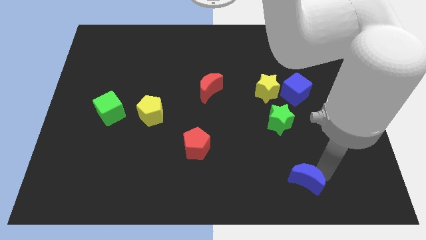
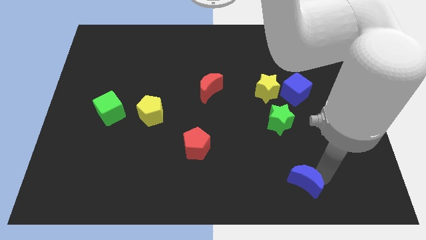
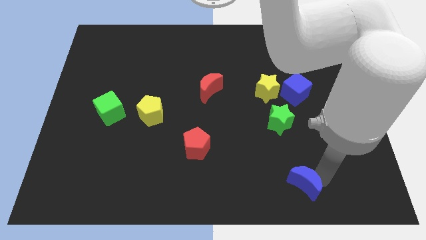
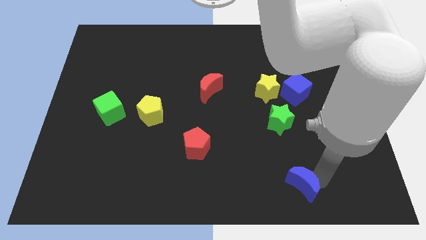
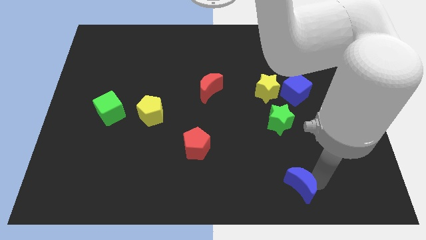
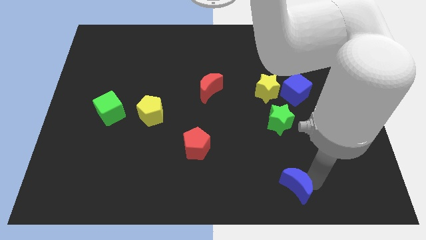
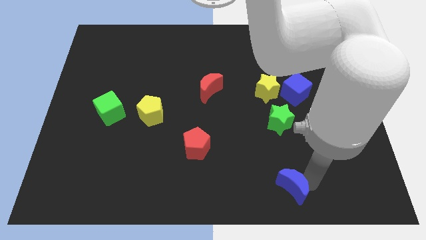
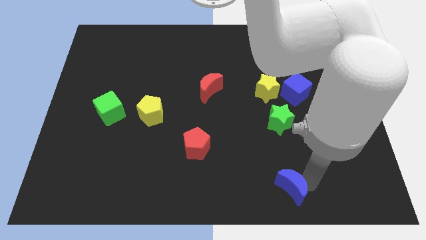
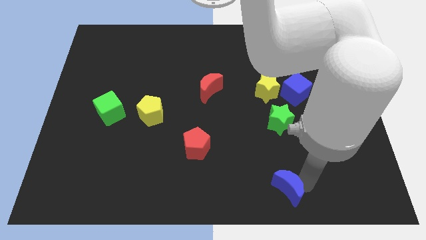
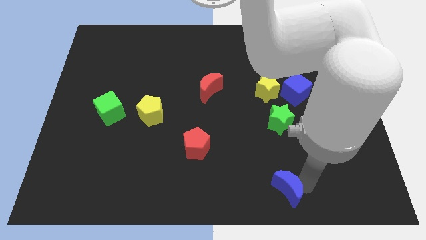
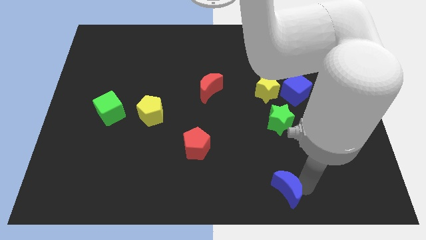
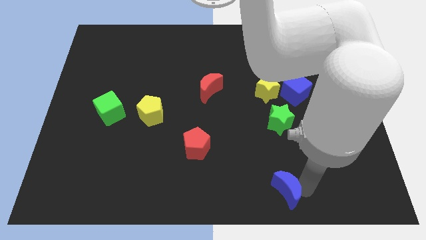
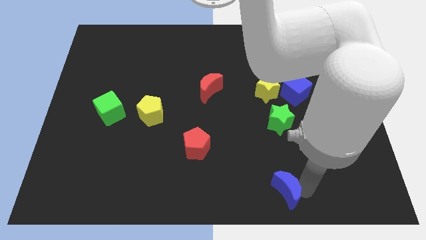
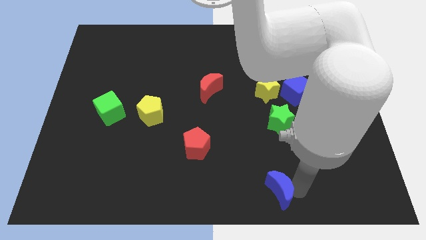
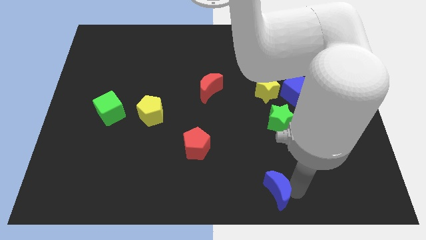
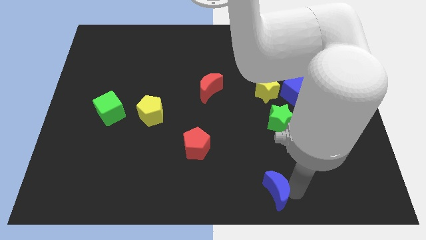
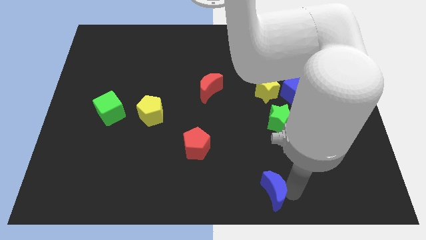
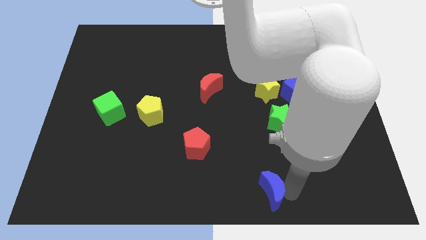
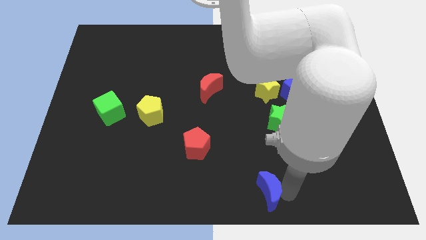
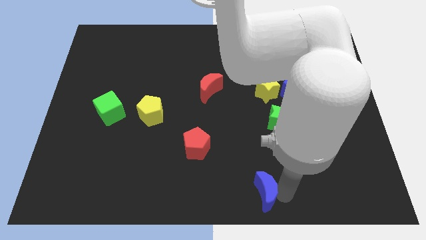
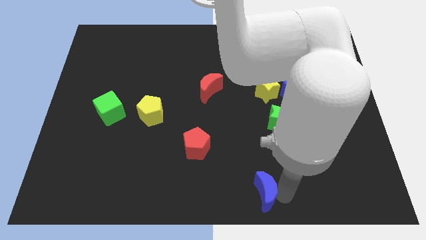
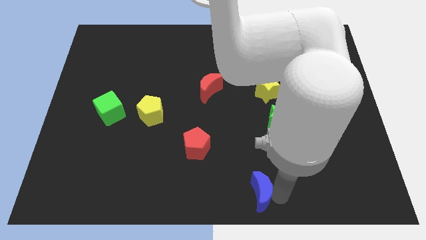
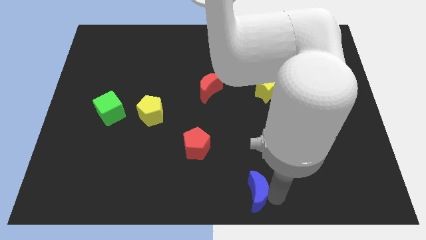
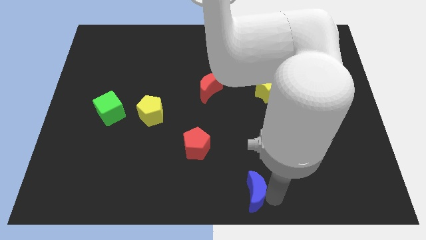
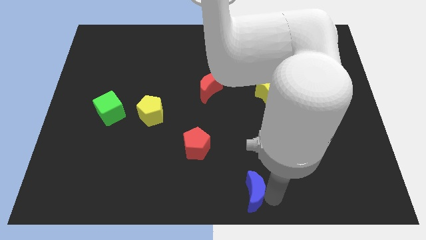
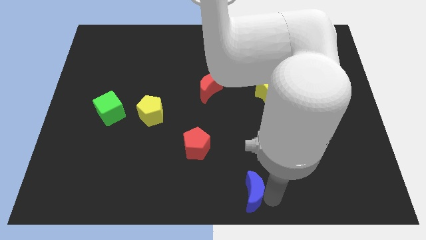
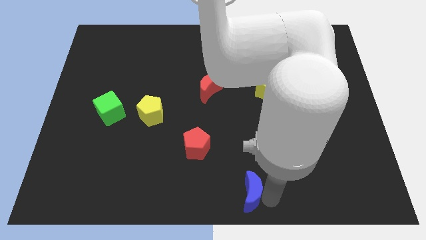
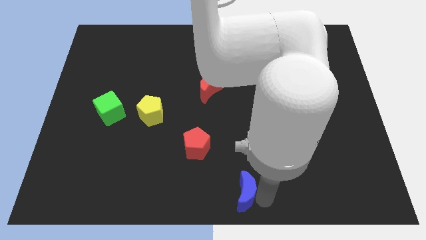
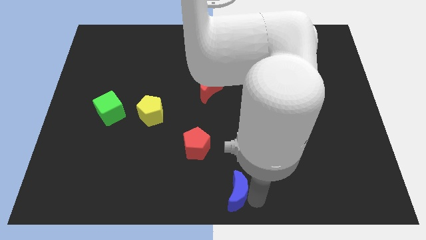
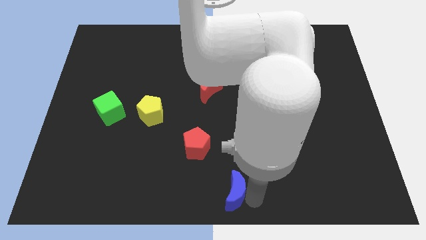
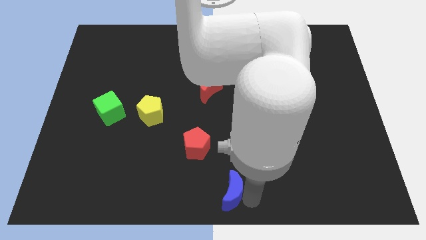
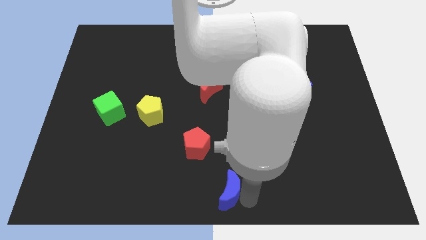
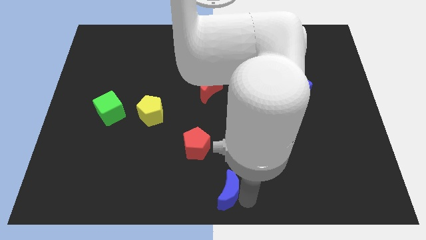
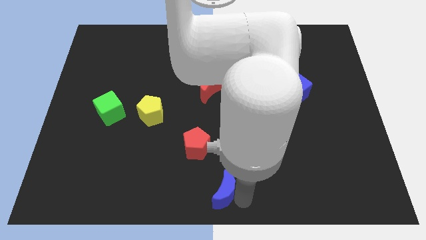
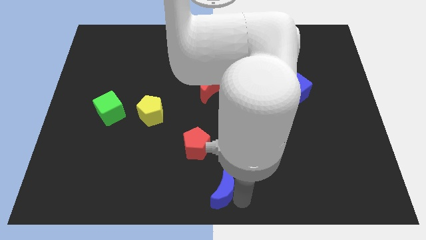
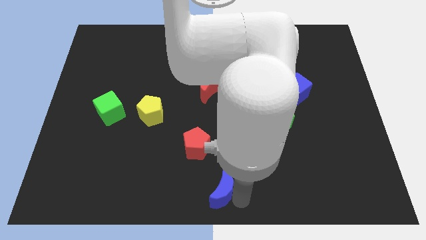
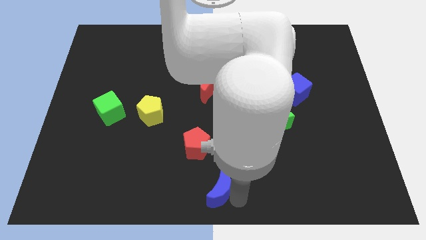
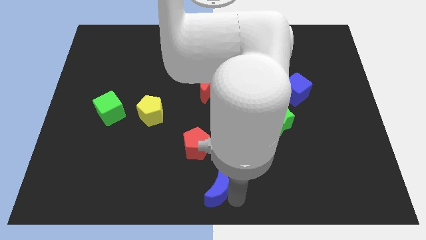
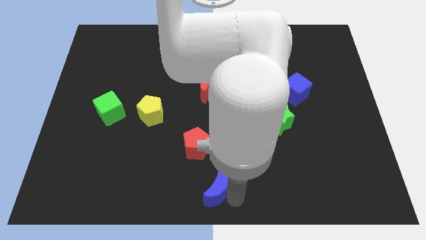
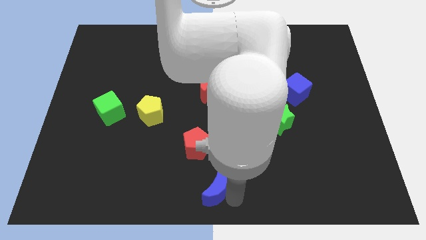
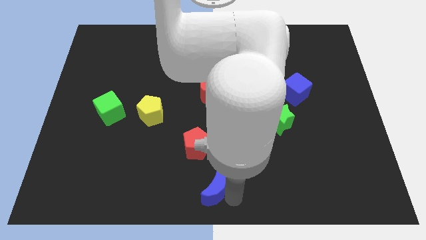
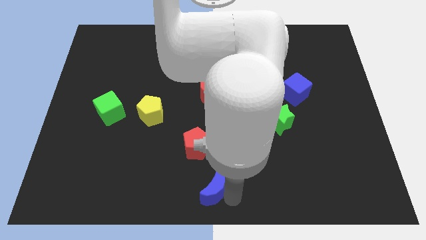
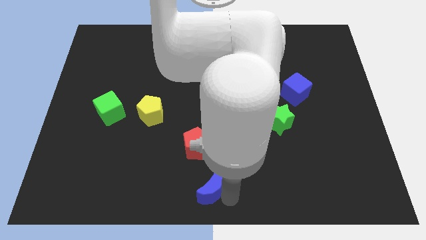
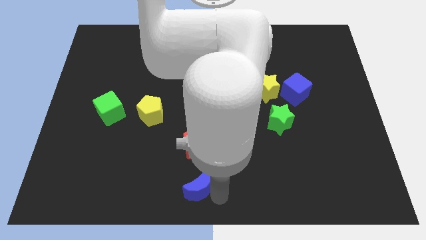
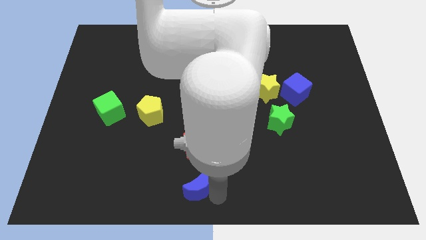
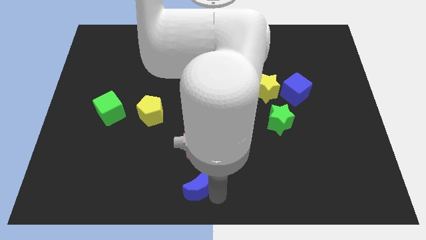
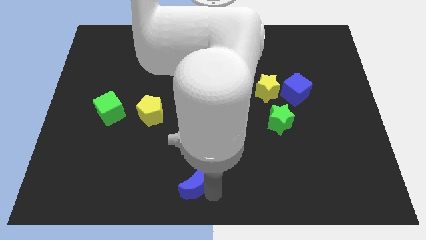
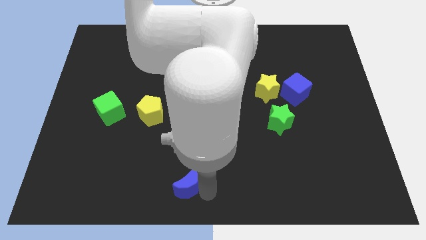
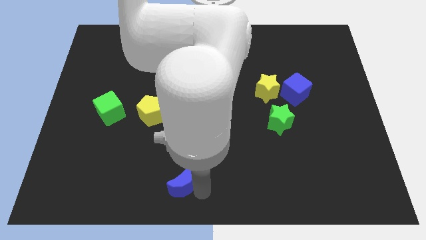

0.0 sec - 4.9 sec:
place the blue crescent below the red pentagon

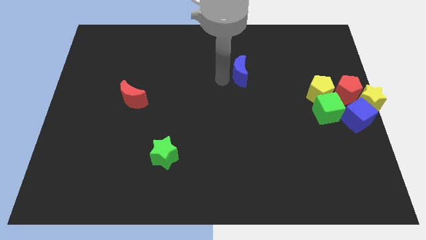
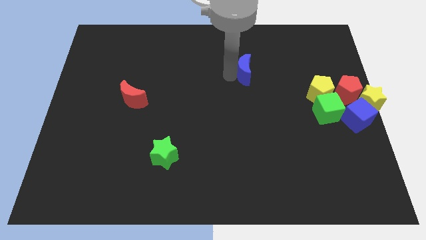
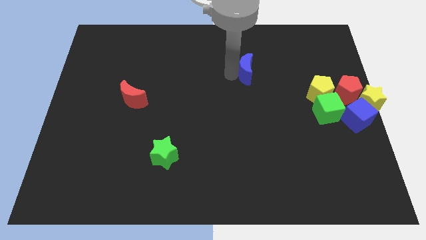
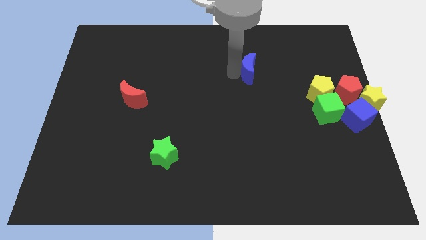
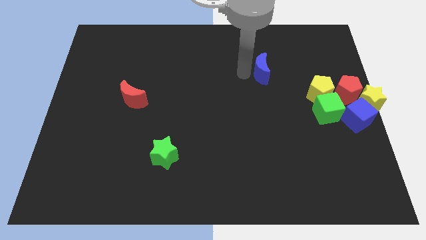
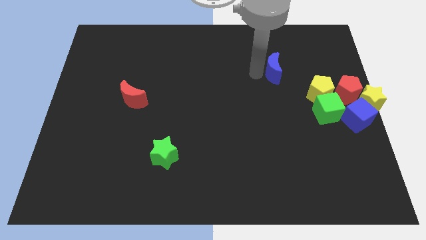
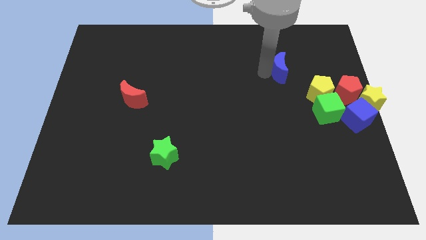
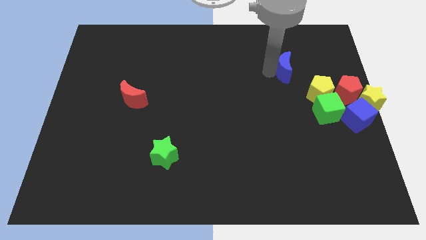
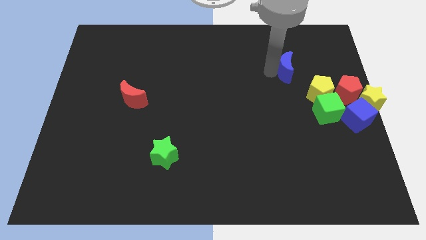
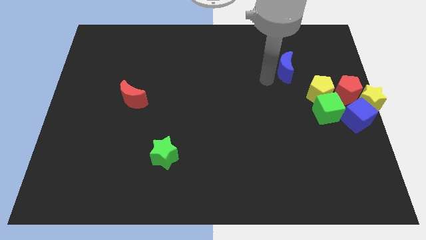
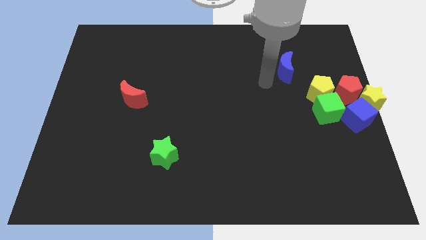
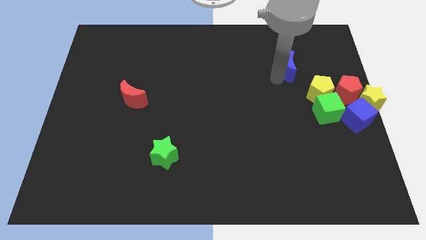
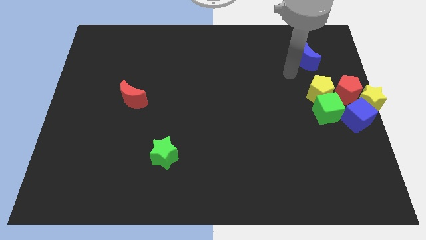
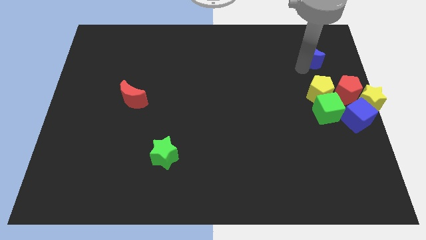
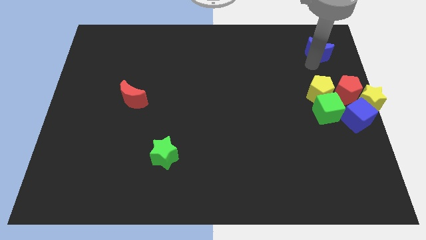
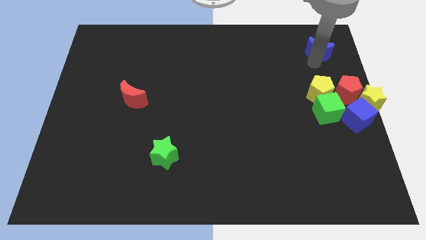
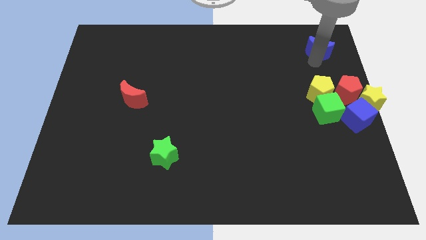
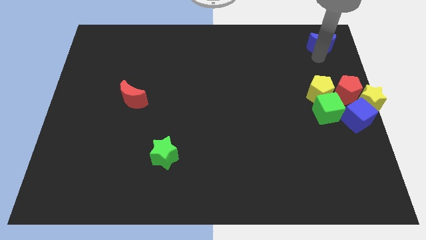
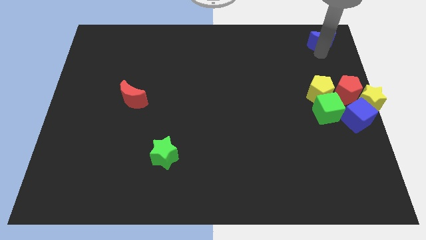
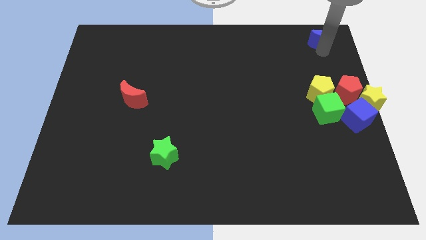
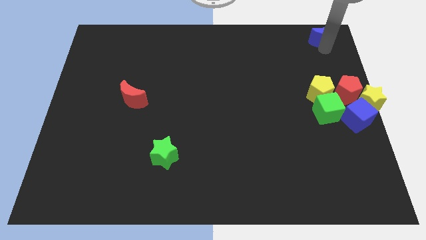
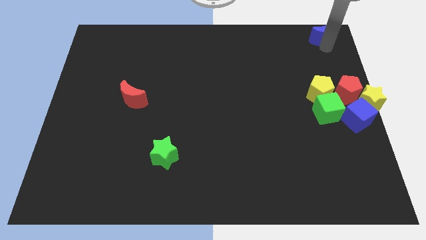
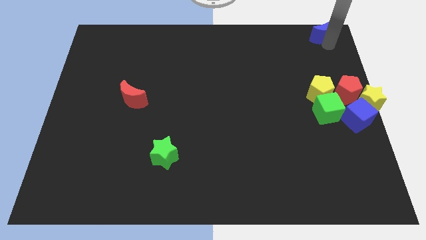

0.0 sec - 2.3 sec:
push the blue moon towards the top right side of the board

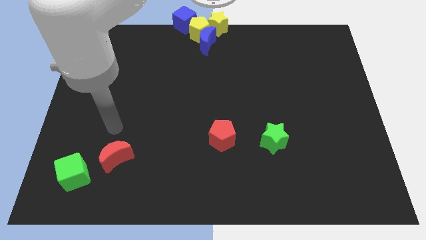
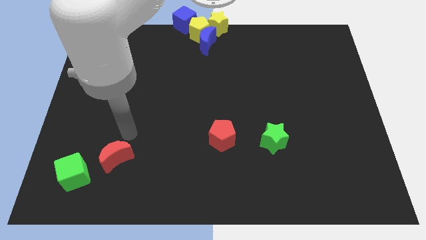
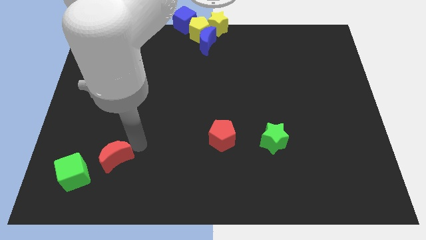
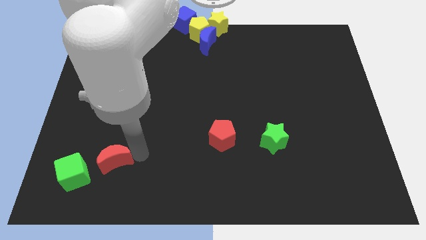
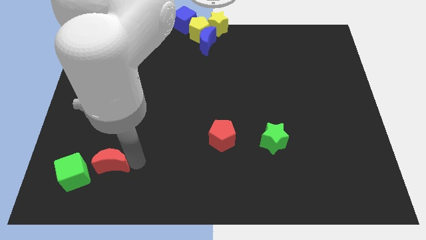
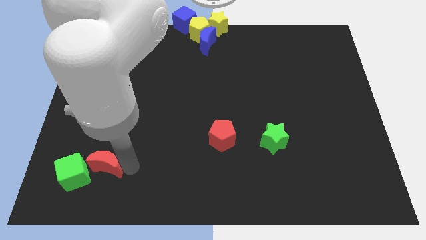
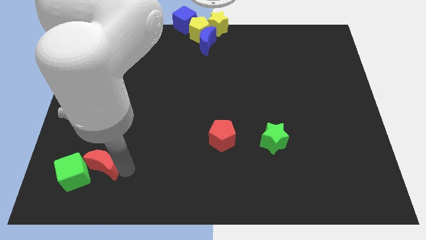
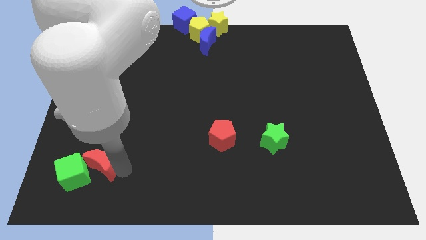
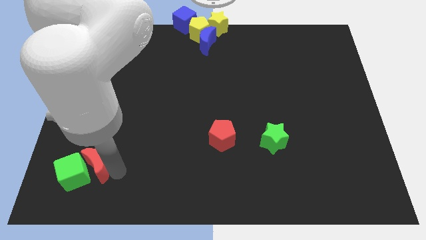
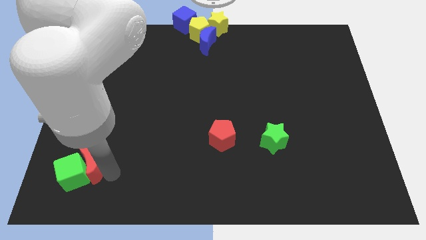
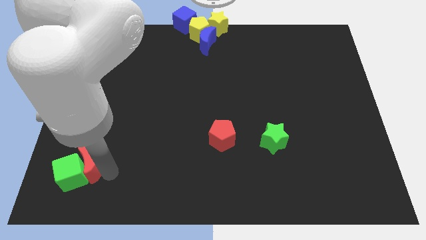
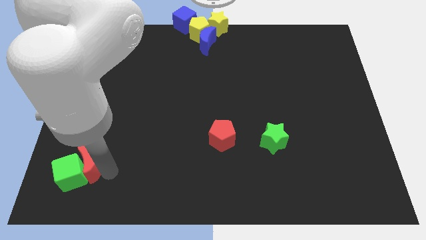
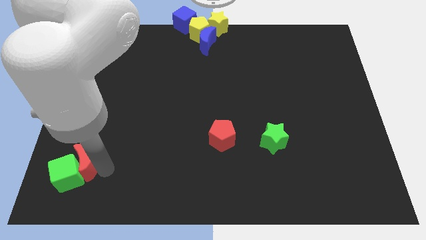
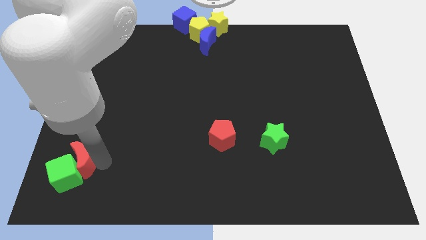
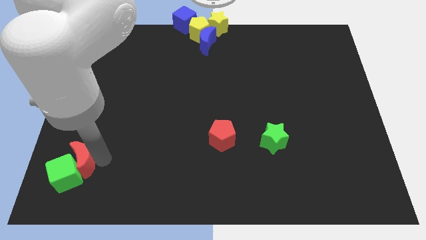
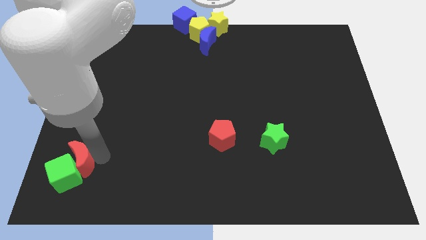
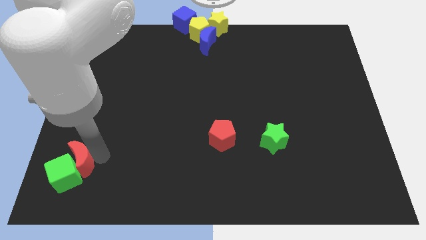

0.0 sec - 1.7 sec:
push the red crescent into the green cube
